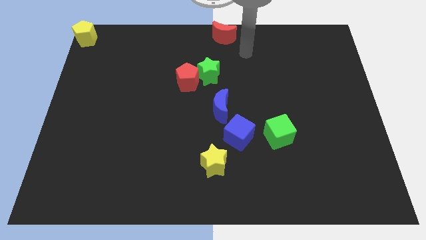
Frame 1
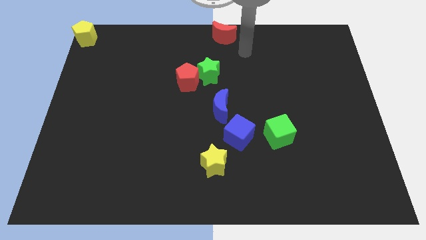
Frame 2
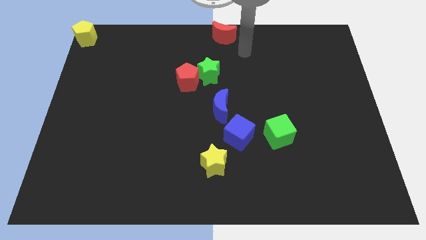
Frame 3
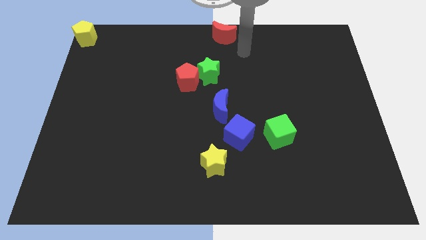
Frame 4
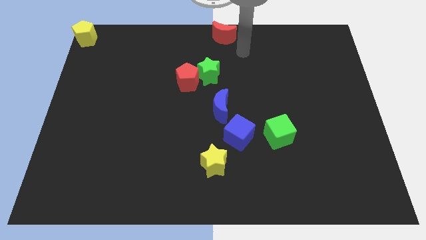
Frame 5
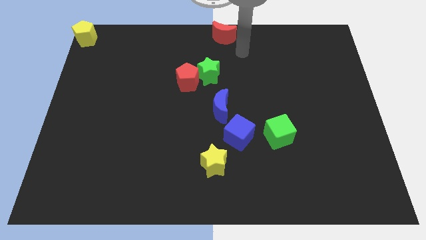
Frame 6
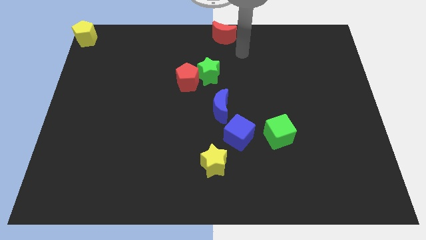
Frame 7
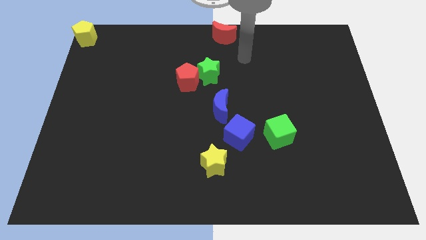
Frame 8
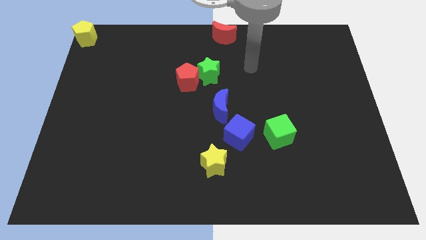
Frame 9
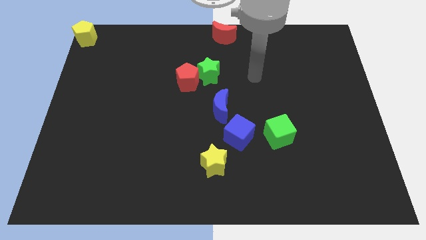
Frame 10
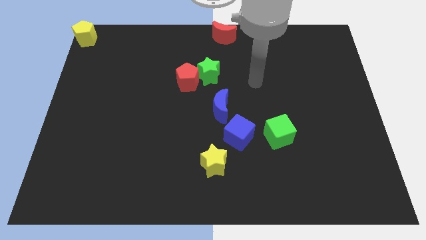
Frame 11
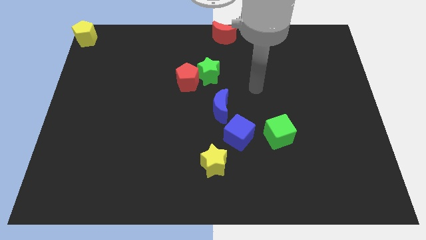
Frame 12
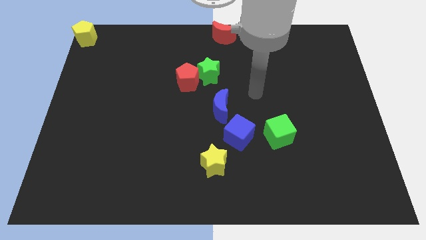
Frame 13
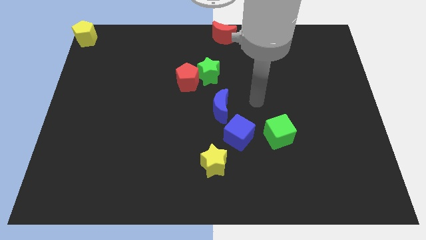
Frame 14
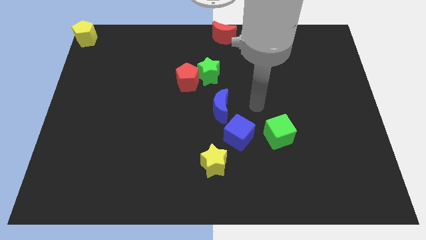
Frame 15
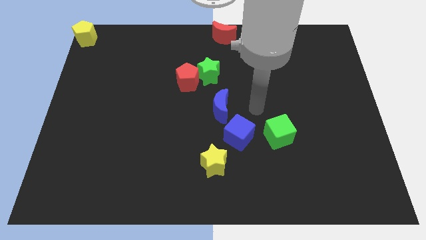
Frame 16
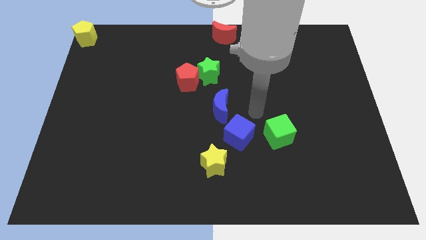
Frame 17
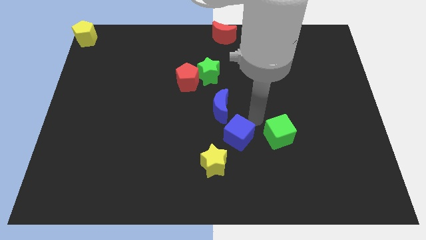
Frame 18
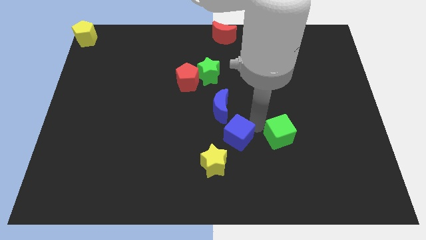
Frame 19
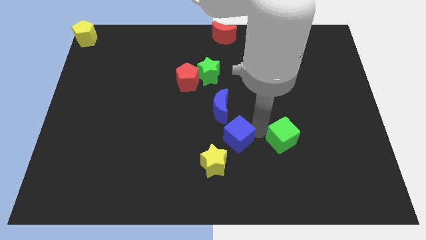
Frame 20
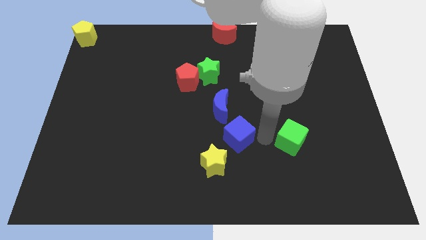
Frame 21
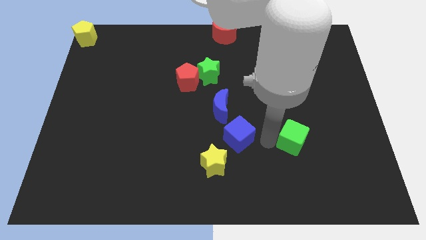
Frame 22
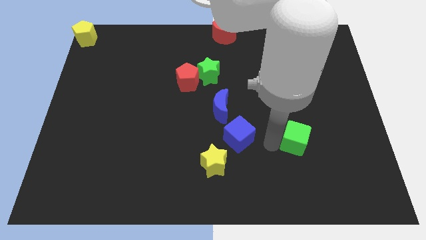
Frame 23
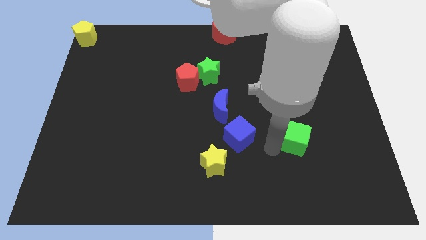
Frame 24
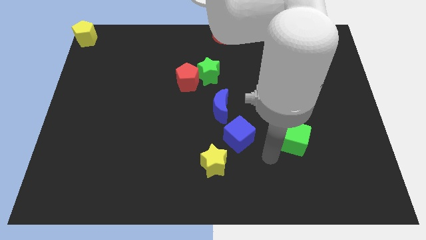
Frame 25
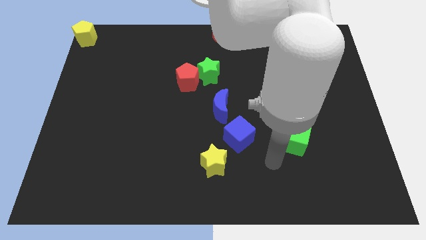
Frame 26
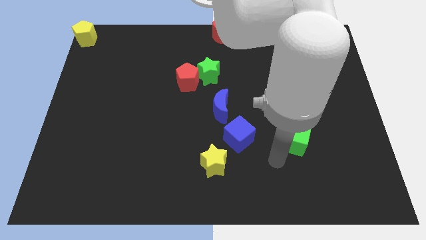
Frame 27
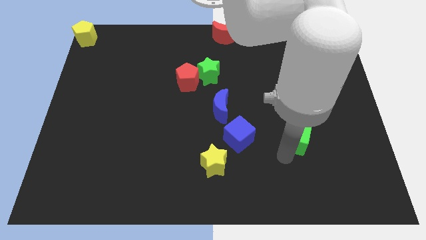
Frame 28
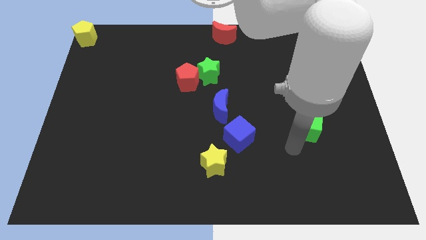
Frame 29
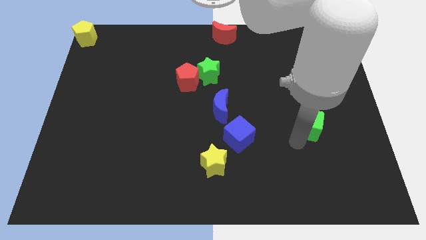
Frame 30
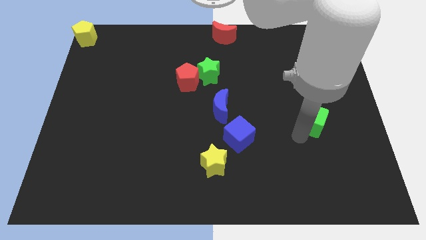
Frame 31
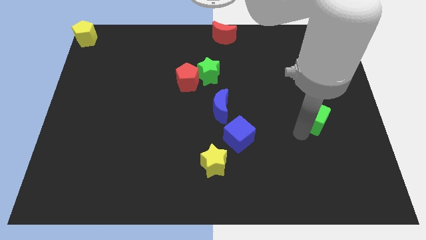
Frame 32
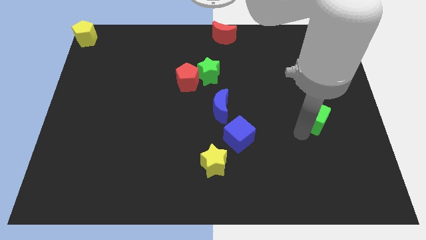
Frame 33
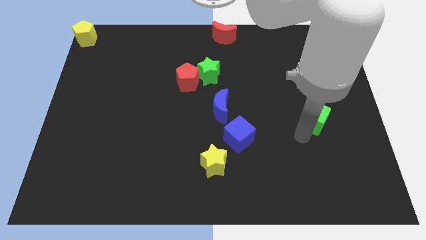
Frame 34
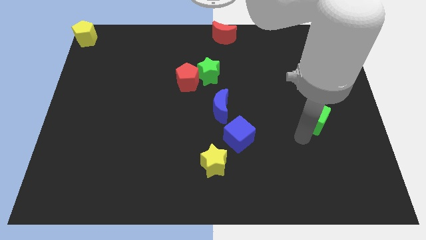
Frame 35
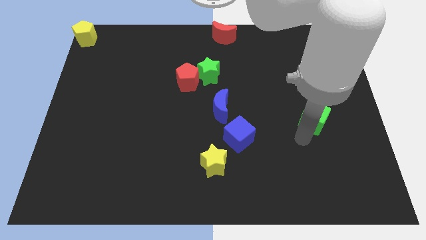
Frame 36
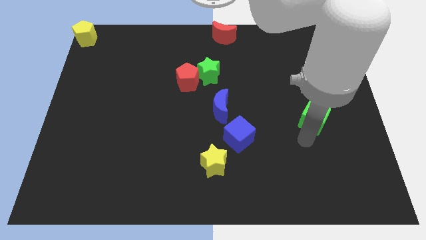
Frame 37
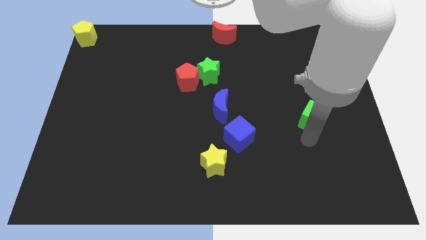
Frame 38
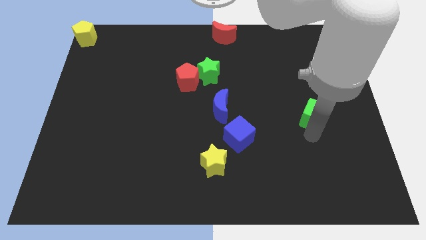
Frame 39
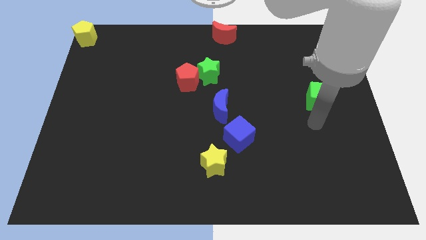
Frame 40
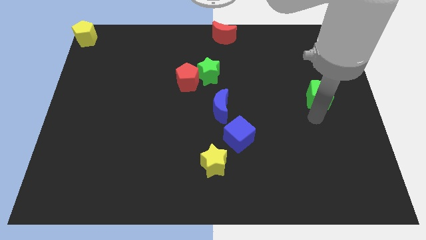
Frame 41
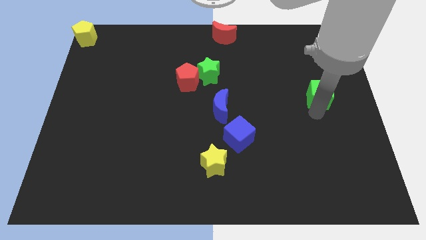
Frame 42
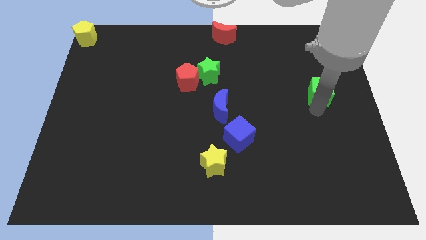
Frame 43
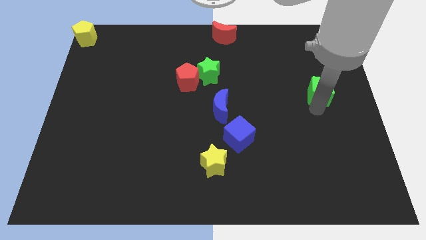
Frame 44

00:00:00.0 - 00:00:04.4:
drag the green cube diagonally to red crescent

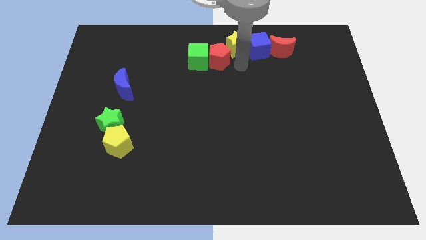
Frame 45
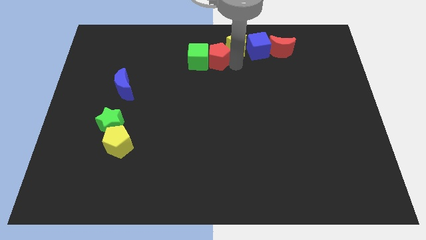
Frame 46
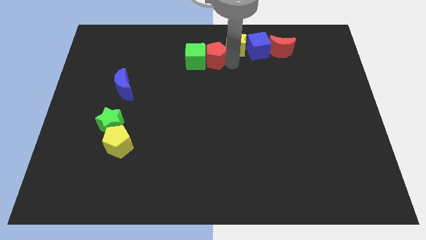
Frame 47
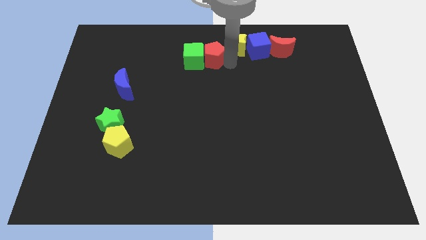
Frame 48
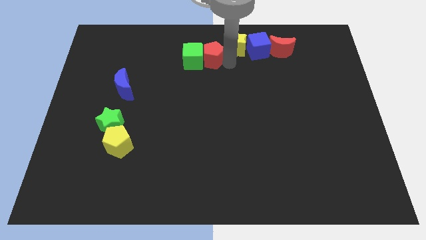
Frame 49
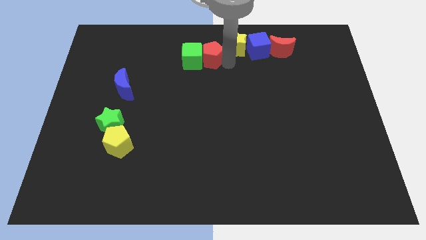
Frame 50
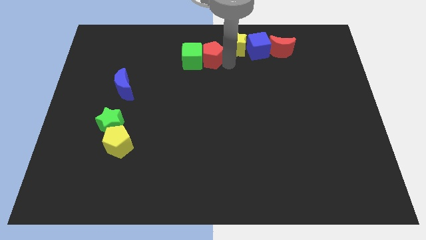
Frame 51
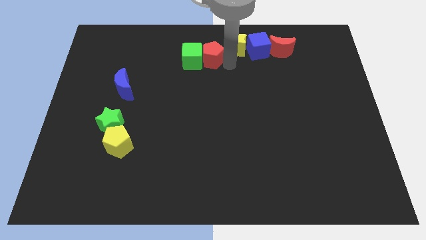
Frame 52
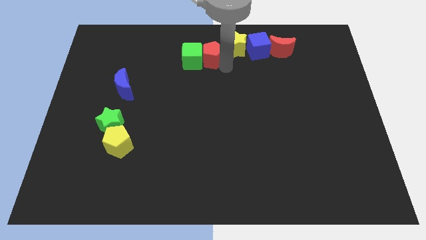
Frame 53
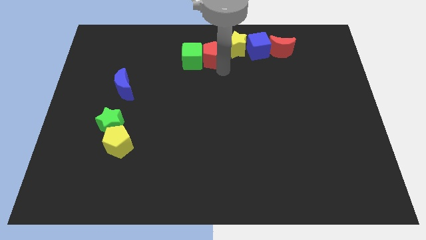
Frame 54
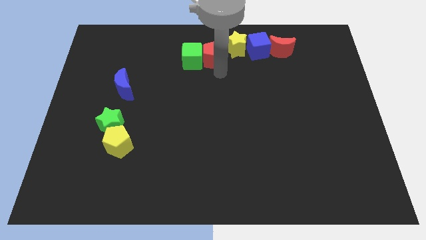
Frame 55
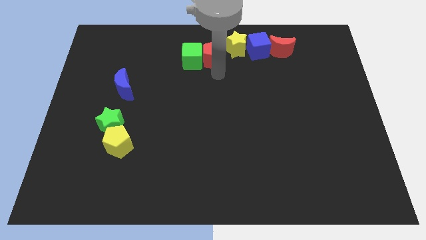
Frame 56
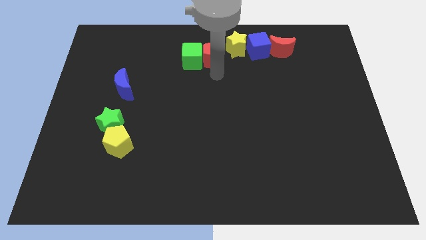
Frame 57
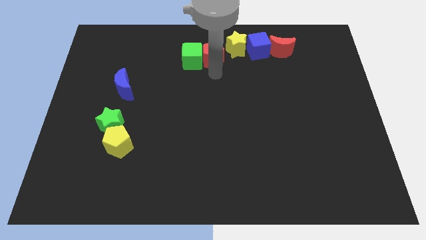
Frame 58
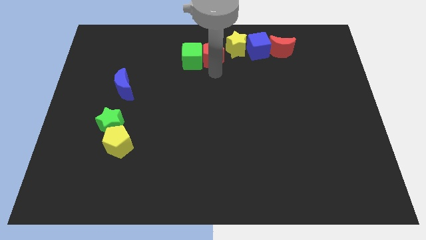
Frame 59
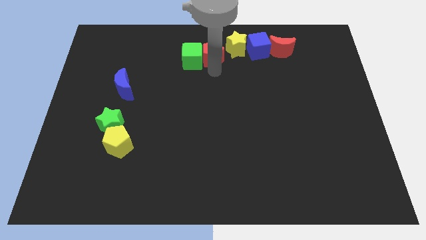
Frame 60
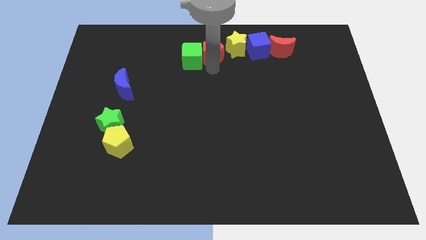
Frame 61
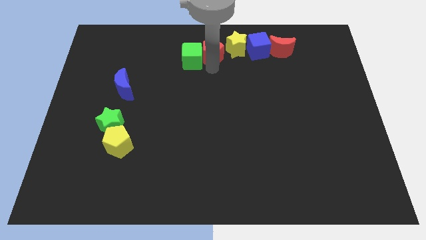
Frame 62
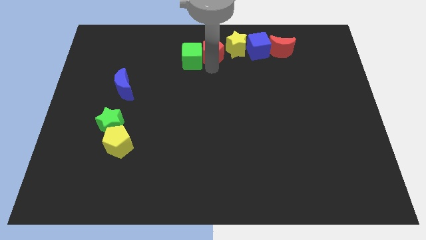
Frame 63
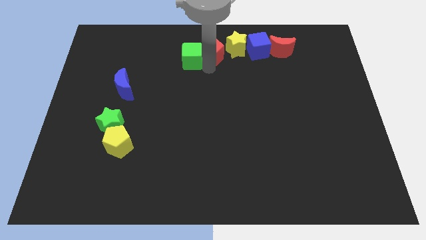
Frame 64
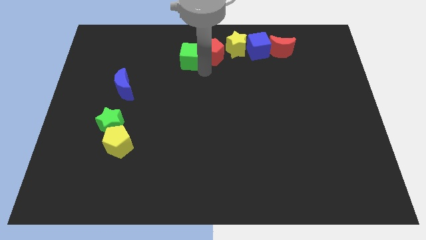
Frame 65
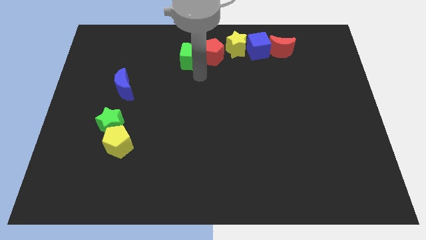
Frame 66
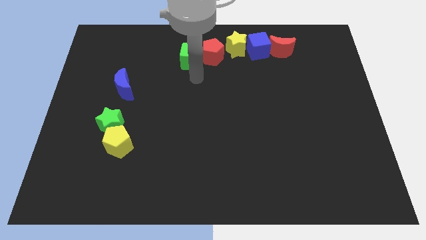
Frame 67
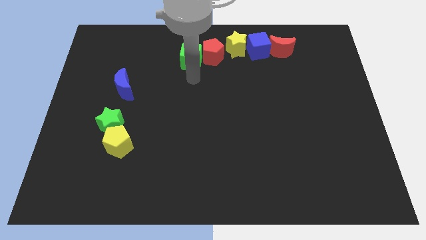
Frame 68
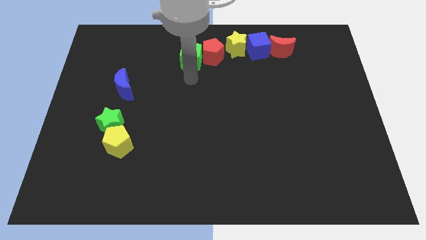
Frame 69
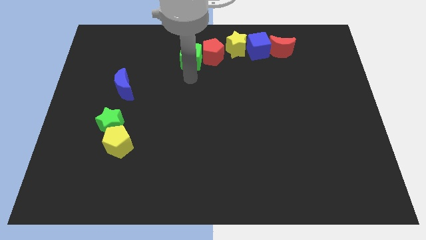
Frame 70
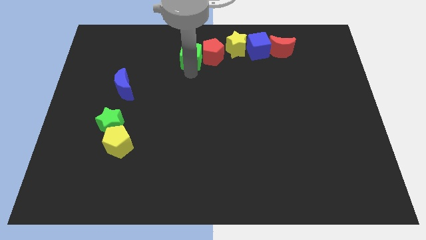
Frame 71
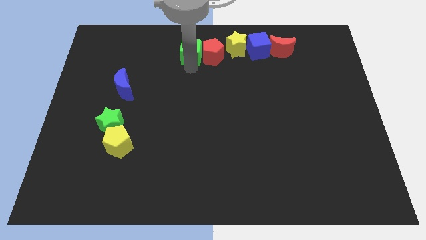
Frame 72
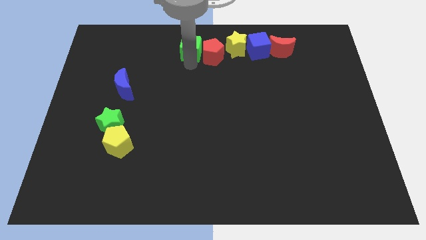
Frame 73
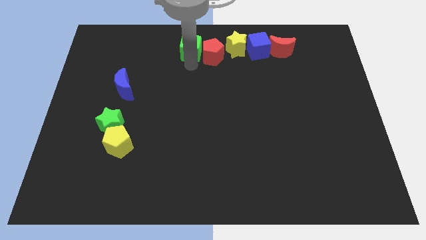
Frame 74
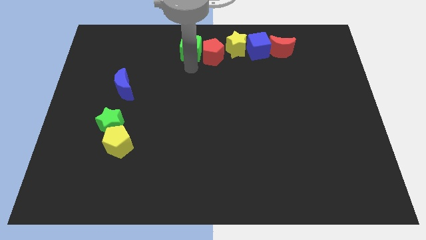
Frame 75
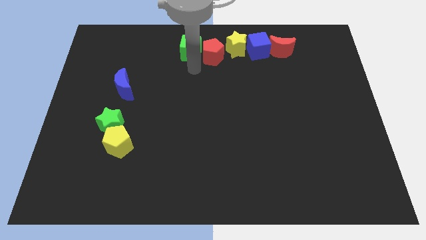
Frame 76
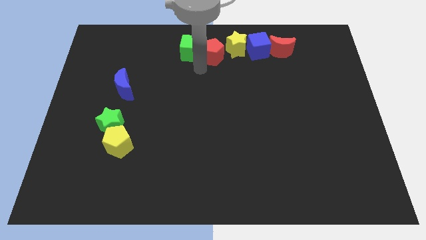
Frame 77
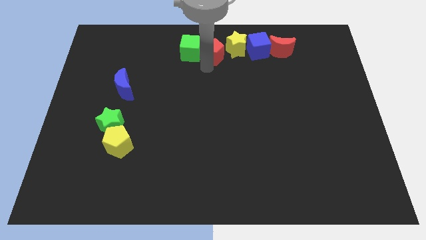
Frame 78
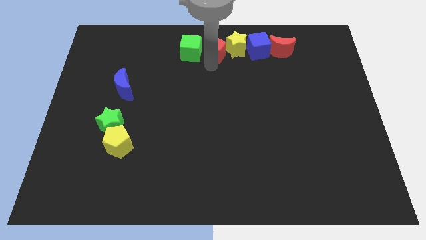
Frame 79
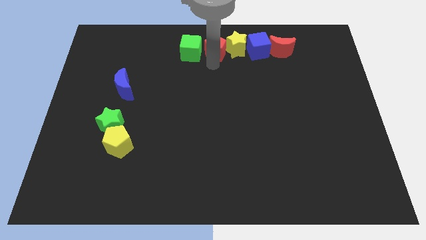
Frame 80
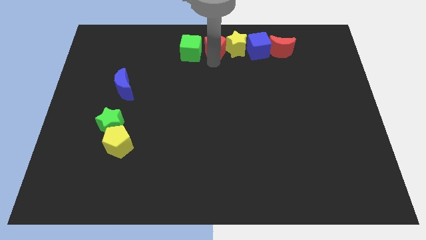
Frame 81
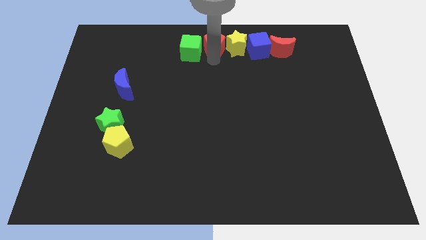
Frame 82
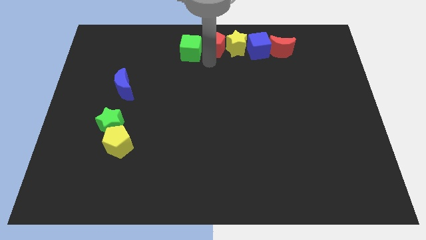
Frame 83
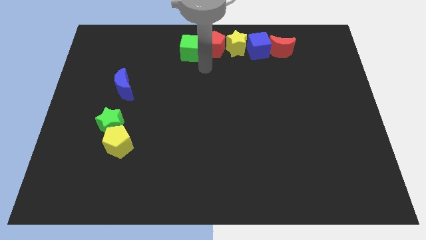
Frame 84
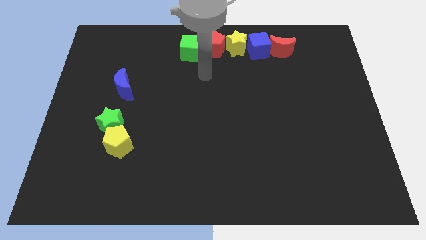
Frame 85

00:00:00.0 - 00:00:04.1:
move the red pentagon and green cube to the left side of the yellow star

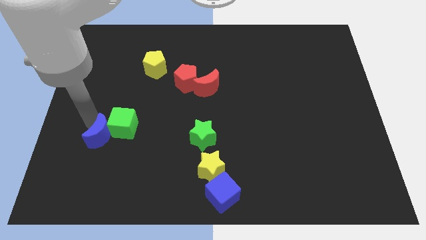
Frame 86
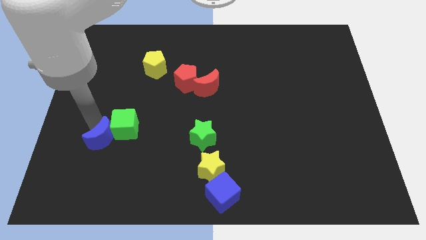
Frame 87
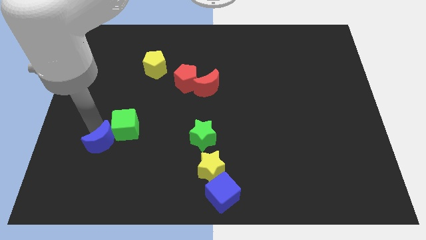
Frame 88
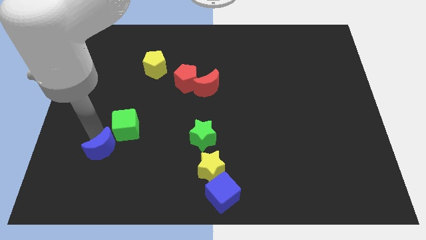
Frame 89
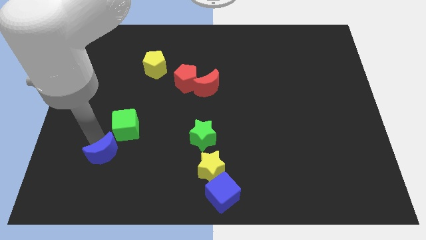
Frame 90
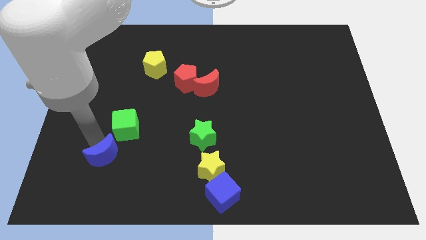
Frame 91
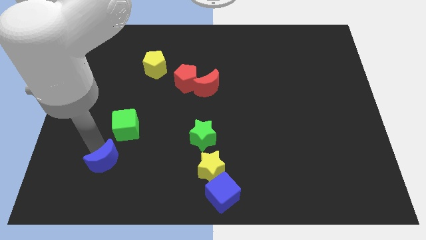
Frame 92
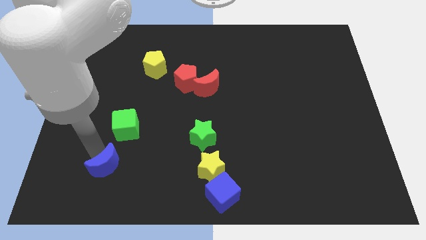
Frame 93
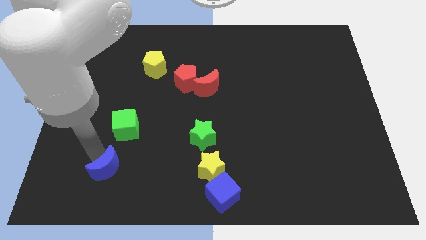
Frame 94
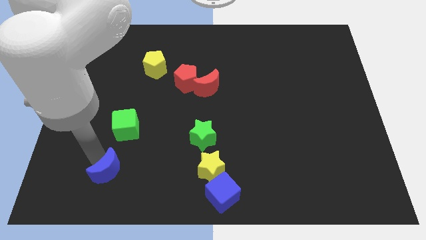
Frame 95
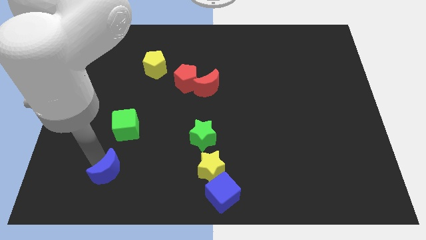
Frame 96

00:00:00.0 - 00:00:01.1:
separate blue moon from green cube
